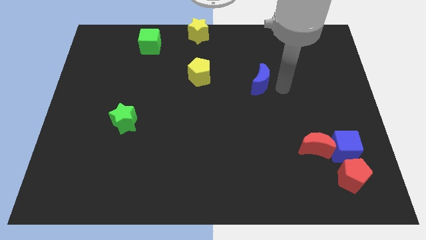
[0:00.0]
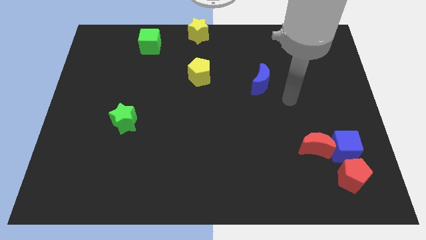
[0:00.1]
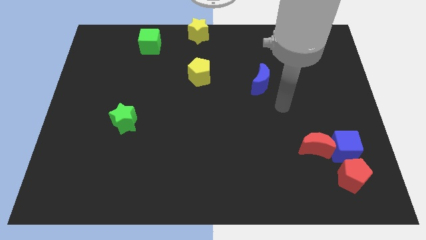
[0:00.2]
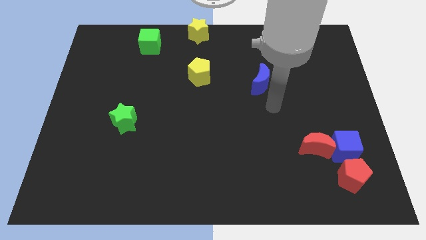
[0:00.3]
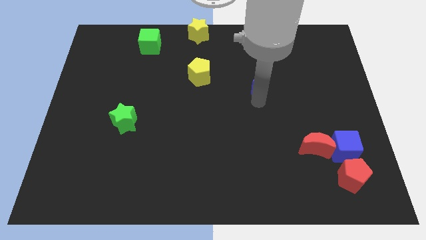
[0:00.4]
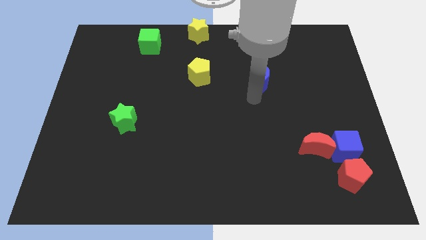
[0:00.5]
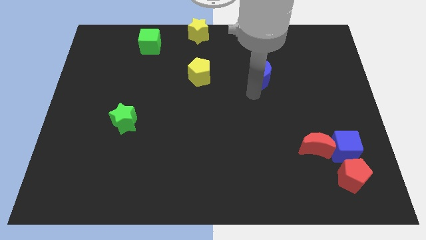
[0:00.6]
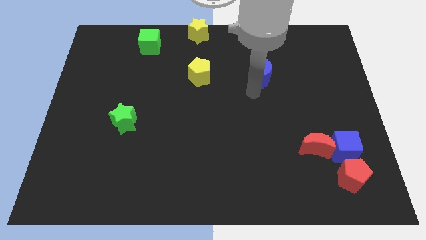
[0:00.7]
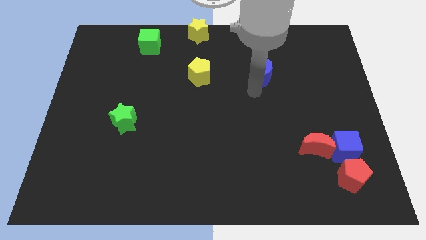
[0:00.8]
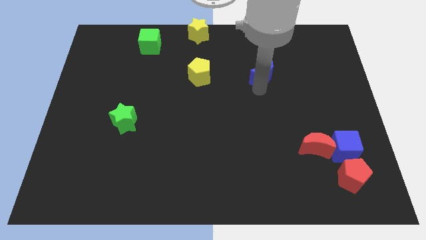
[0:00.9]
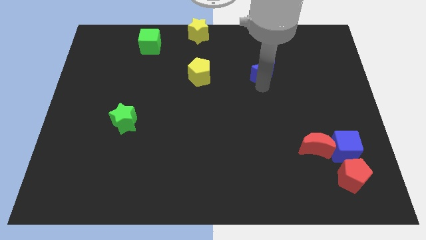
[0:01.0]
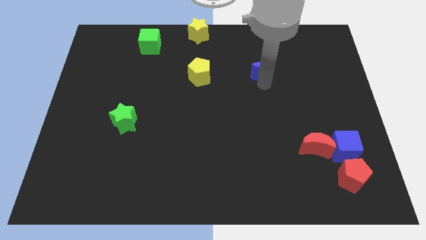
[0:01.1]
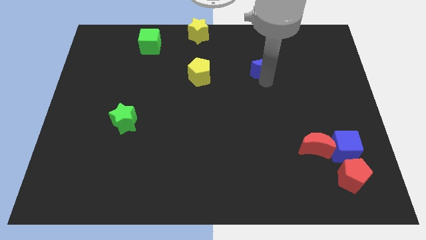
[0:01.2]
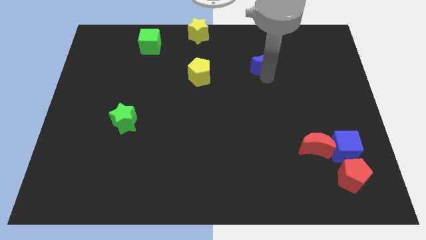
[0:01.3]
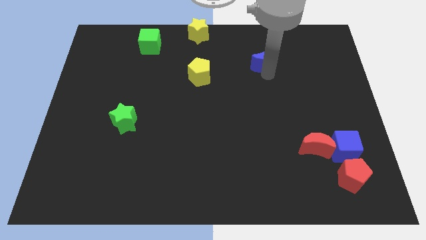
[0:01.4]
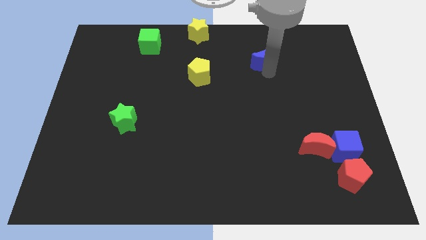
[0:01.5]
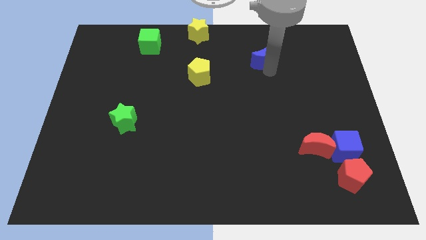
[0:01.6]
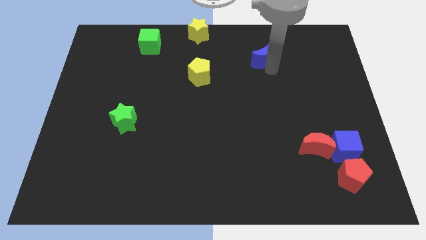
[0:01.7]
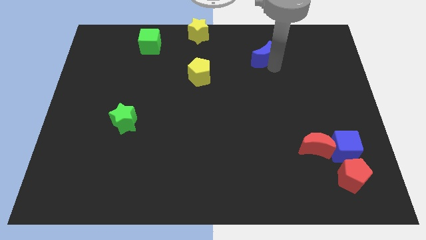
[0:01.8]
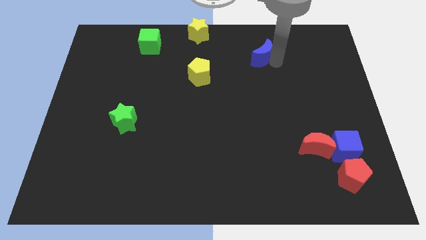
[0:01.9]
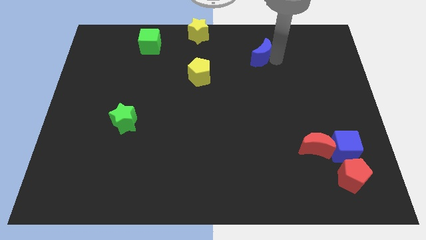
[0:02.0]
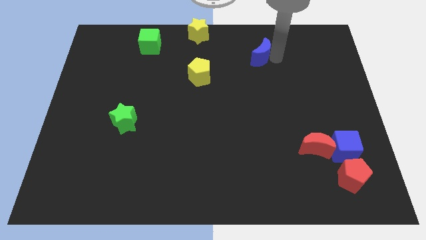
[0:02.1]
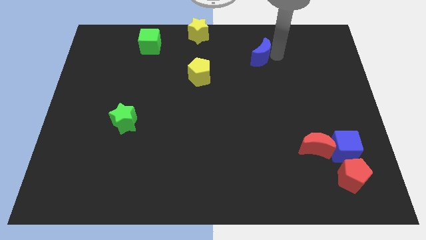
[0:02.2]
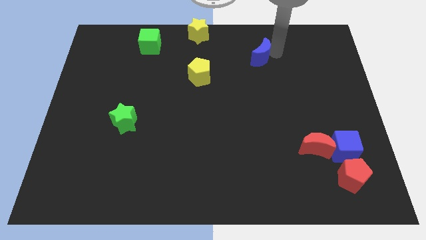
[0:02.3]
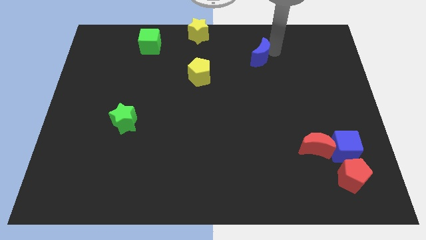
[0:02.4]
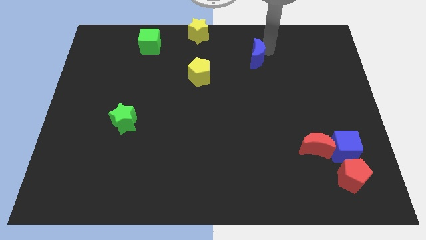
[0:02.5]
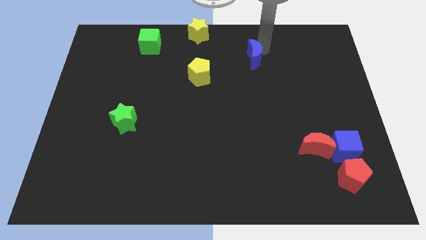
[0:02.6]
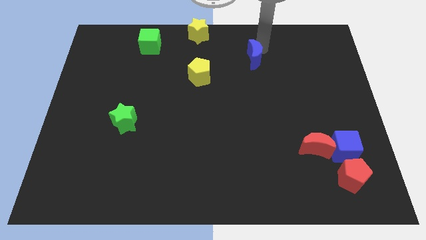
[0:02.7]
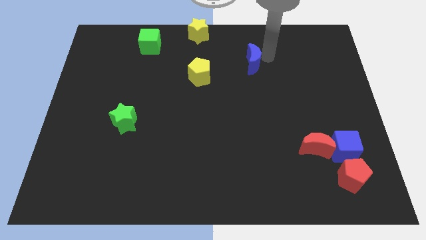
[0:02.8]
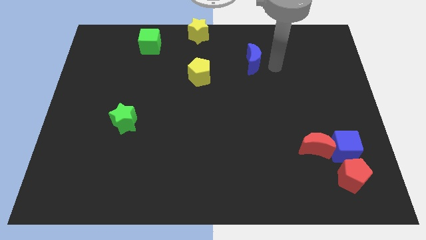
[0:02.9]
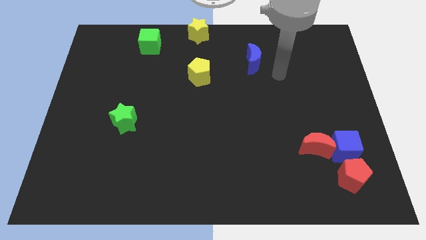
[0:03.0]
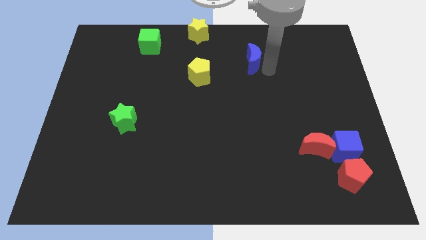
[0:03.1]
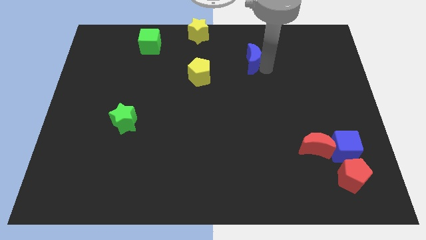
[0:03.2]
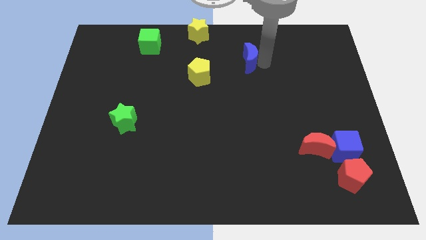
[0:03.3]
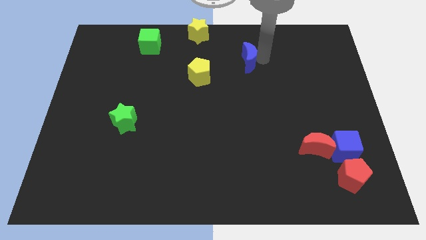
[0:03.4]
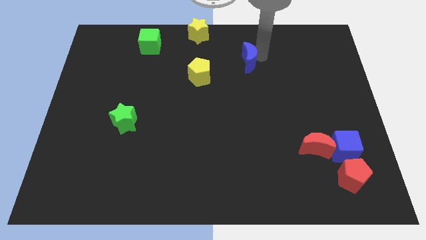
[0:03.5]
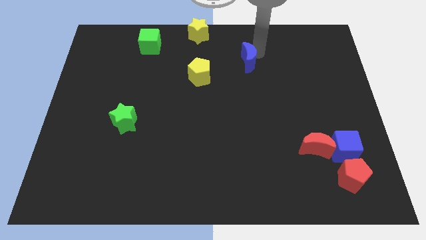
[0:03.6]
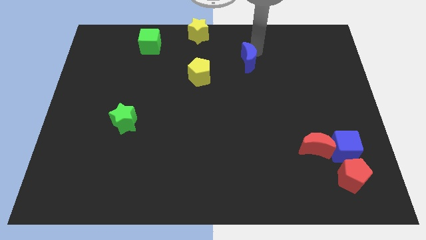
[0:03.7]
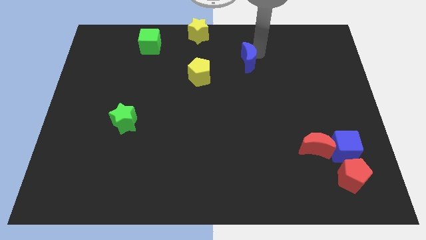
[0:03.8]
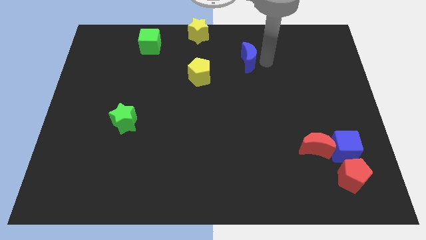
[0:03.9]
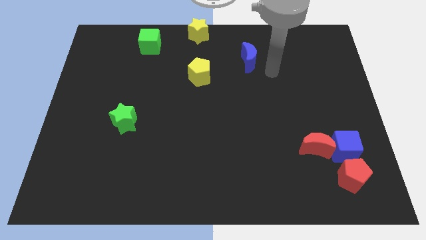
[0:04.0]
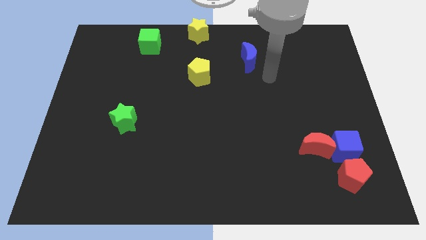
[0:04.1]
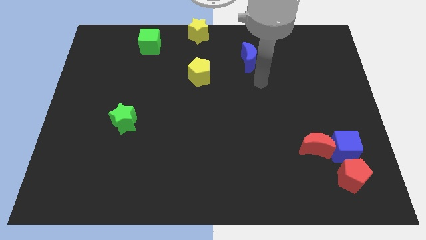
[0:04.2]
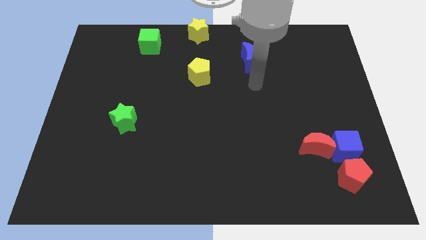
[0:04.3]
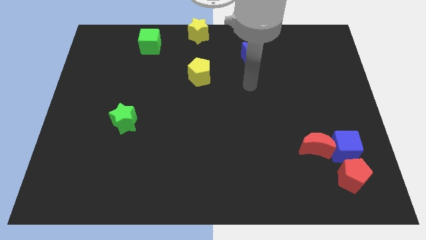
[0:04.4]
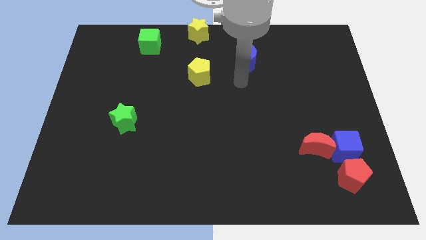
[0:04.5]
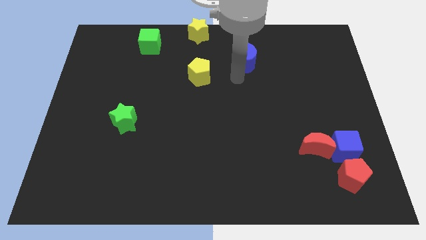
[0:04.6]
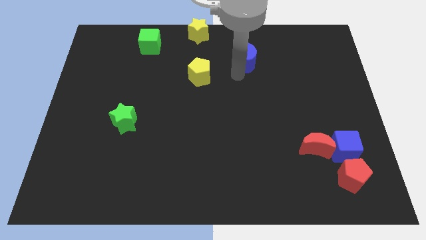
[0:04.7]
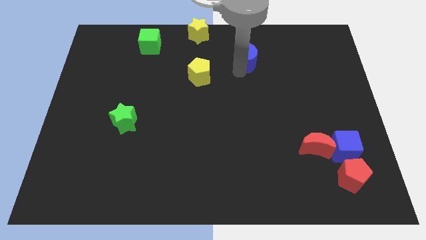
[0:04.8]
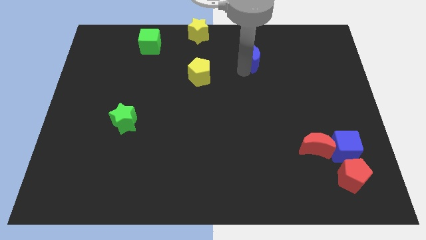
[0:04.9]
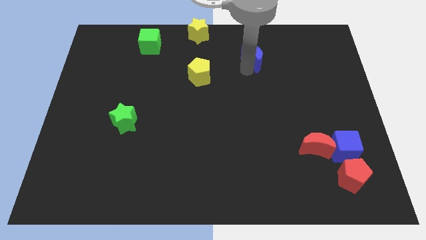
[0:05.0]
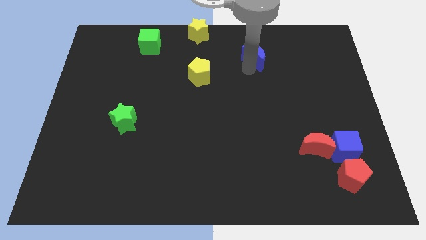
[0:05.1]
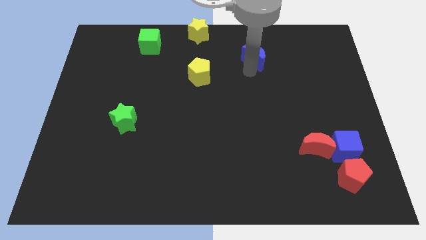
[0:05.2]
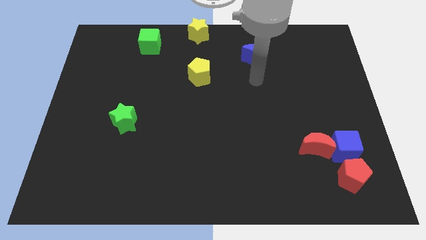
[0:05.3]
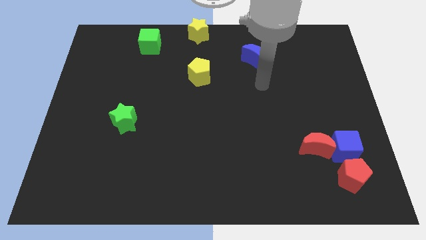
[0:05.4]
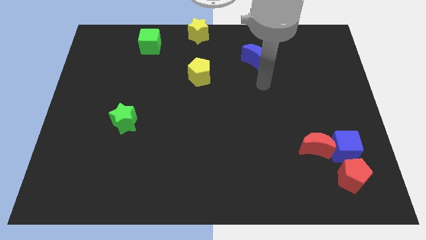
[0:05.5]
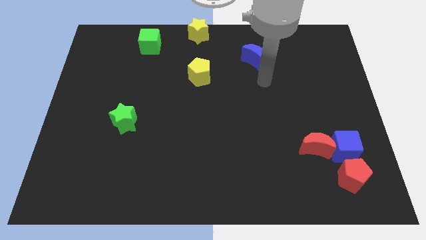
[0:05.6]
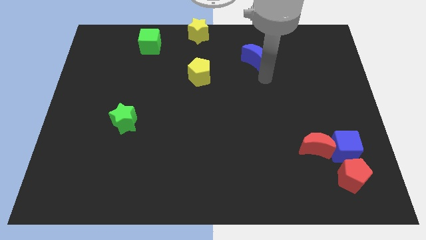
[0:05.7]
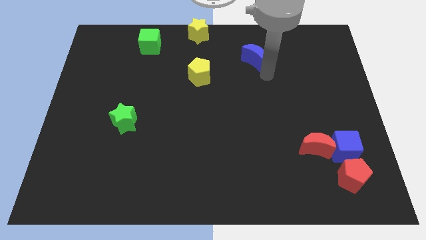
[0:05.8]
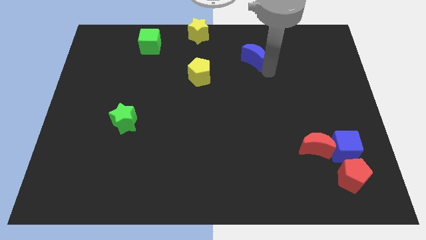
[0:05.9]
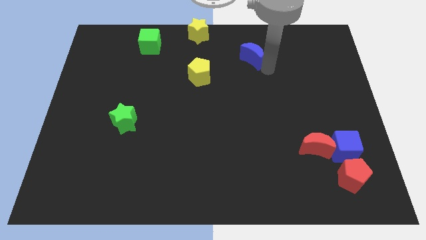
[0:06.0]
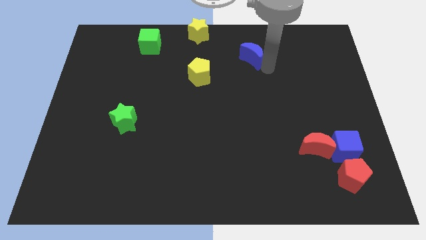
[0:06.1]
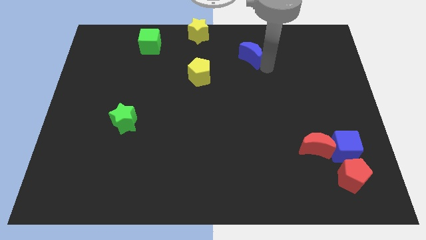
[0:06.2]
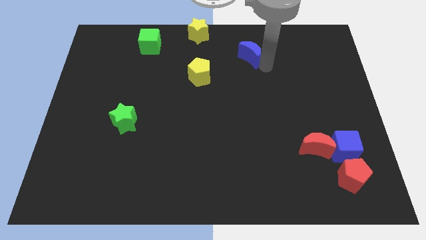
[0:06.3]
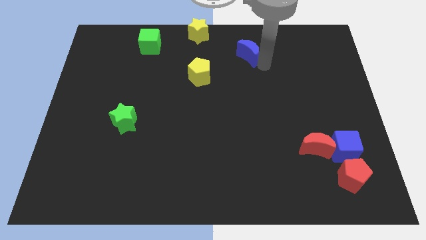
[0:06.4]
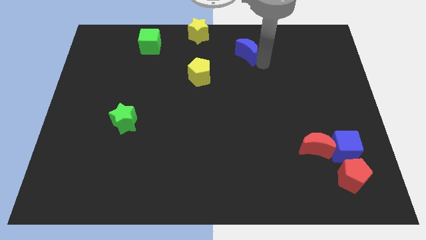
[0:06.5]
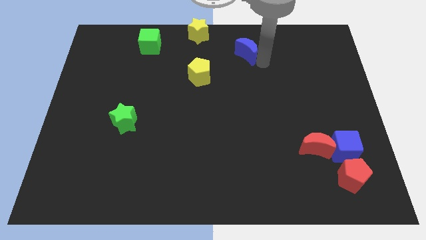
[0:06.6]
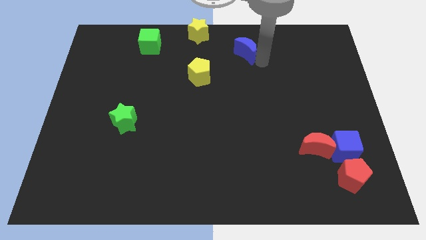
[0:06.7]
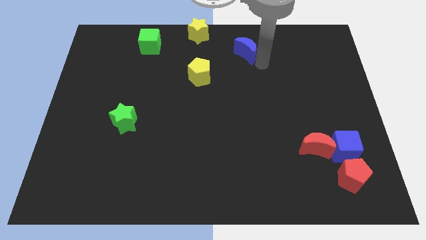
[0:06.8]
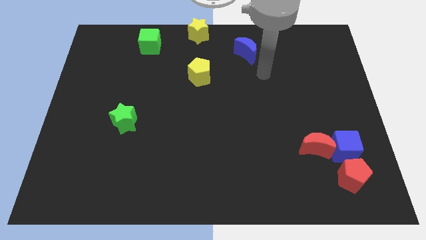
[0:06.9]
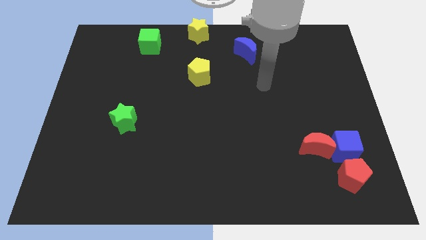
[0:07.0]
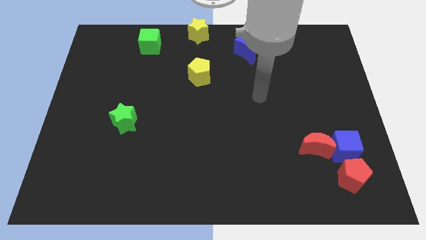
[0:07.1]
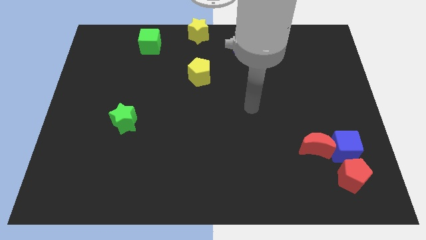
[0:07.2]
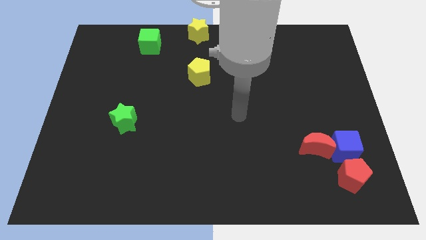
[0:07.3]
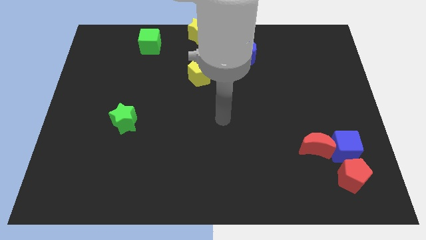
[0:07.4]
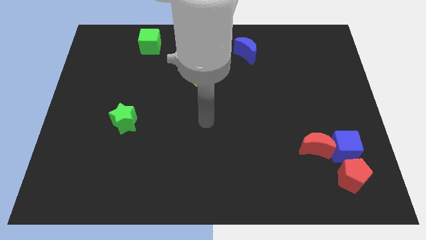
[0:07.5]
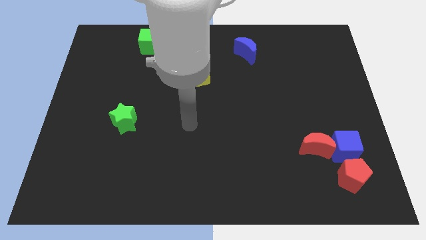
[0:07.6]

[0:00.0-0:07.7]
move the blue crescent diagonal to the yellow star

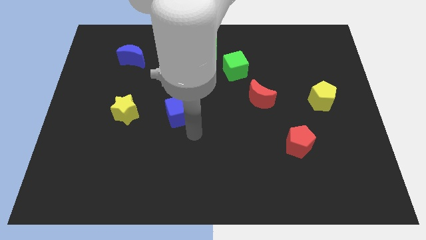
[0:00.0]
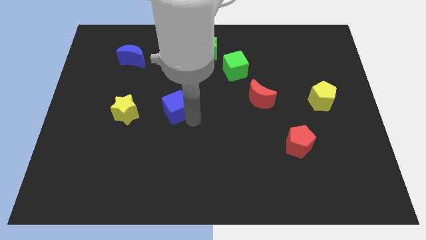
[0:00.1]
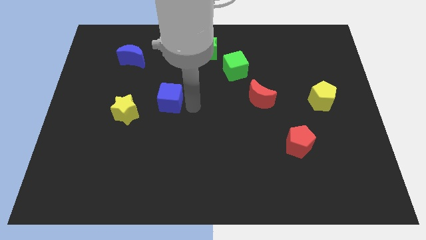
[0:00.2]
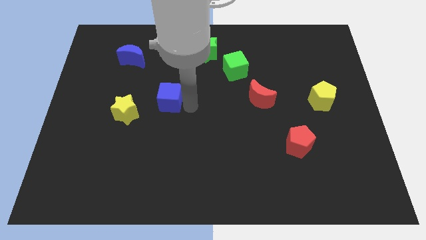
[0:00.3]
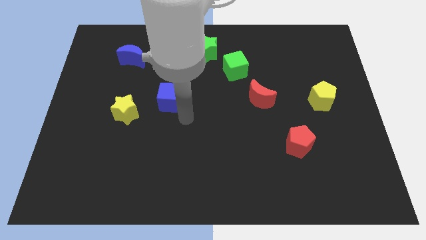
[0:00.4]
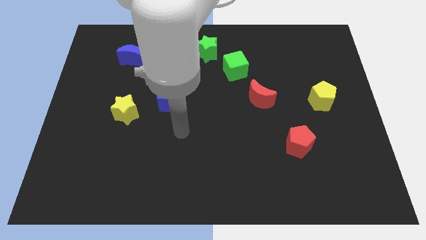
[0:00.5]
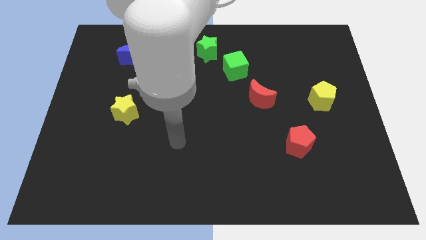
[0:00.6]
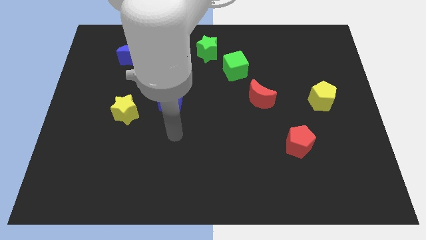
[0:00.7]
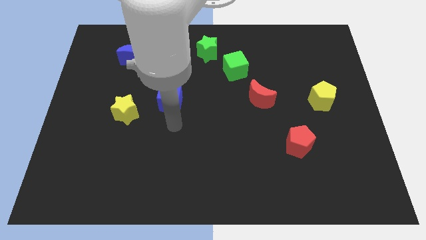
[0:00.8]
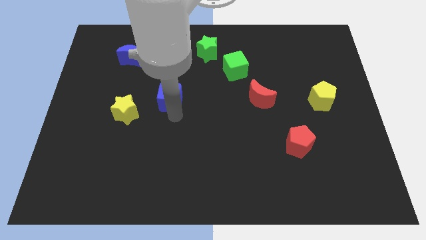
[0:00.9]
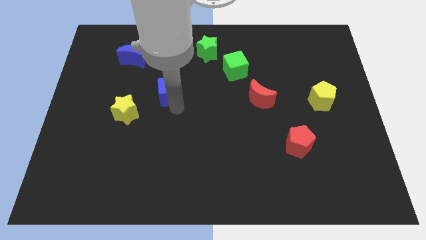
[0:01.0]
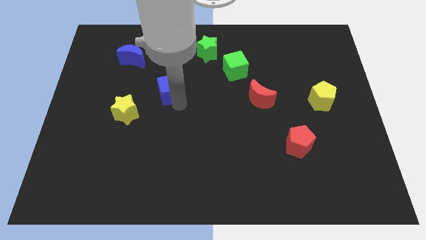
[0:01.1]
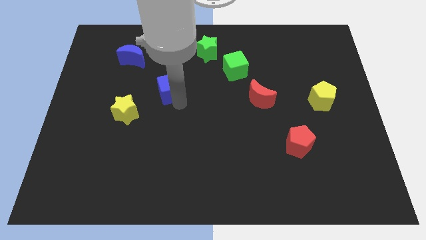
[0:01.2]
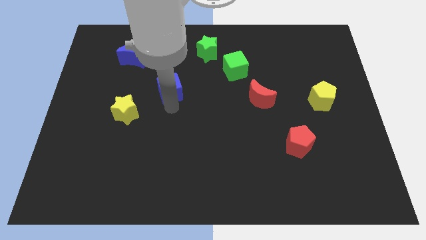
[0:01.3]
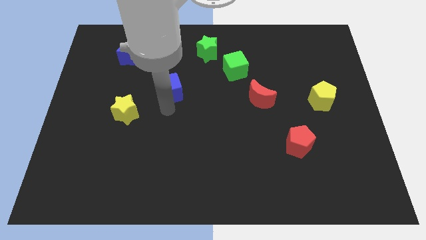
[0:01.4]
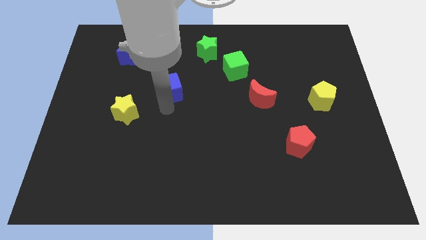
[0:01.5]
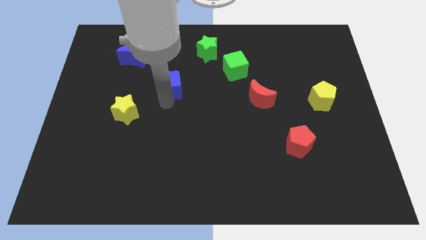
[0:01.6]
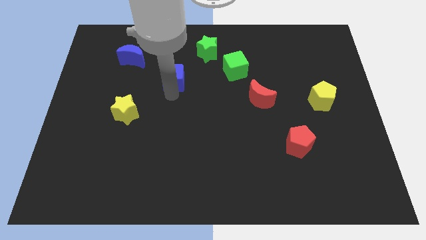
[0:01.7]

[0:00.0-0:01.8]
push the blue cube from center to top side of the board
